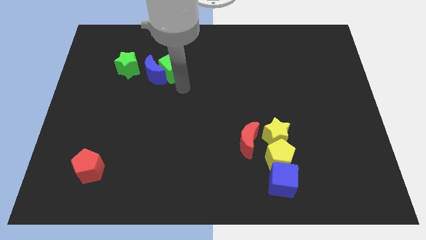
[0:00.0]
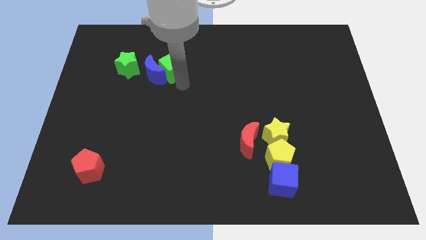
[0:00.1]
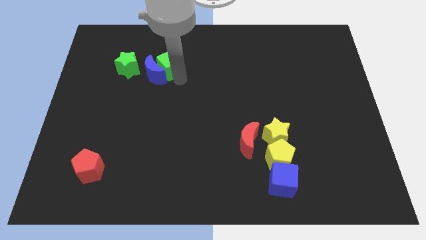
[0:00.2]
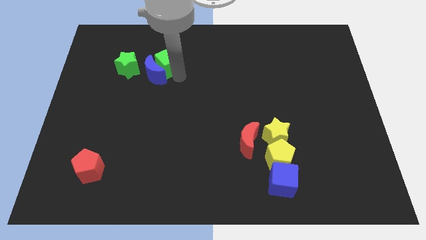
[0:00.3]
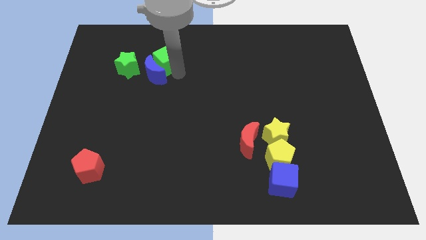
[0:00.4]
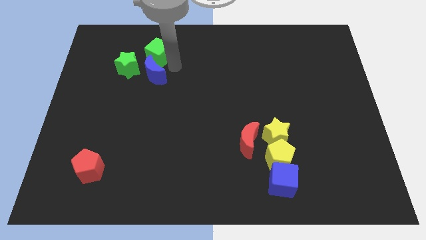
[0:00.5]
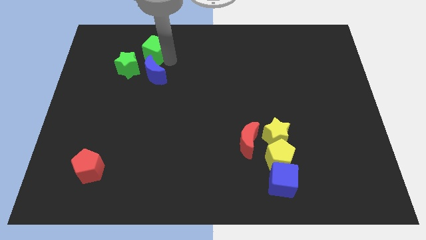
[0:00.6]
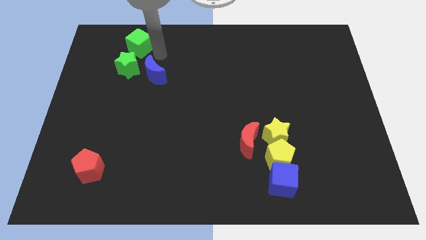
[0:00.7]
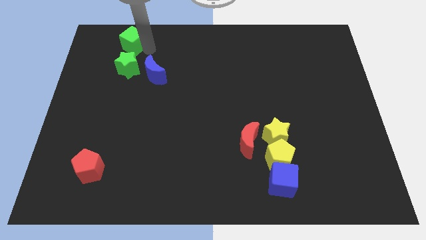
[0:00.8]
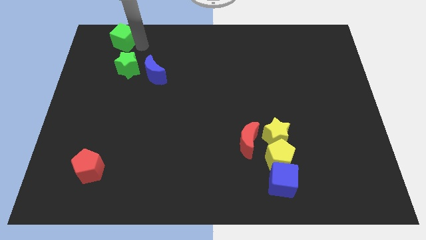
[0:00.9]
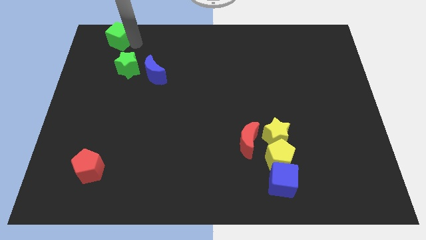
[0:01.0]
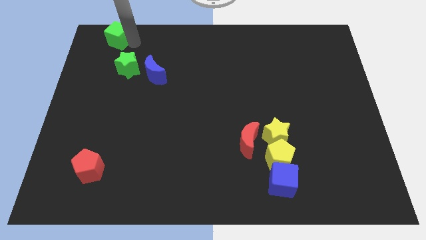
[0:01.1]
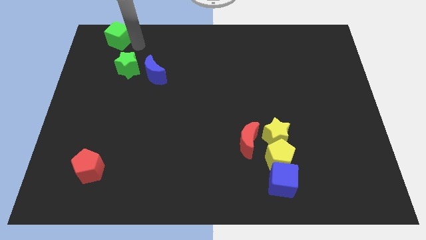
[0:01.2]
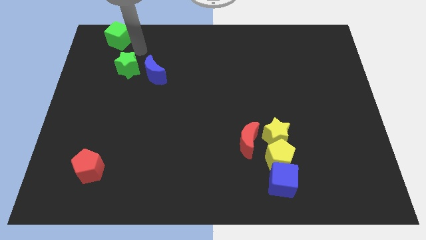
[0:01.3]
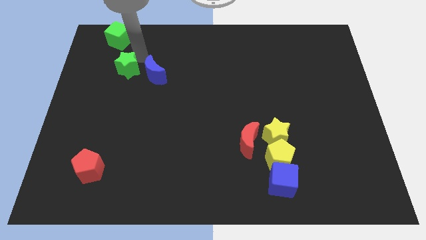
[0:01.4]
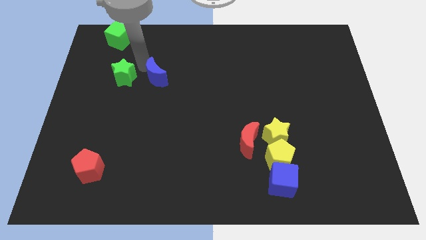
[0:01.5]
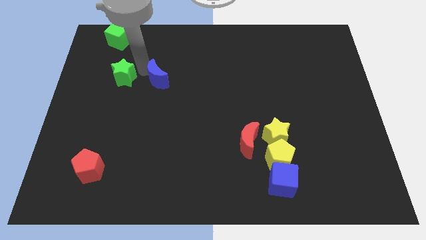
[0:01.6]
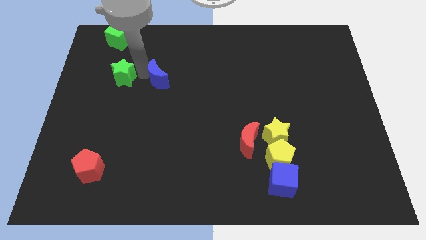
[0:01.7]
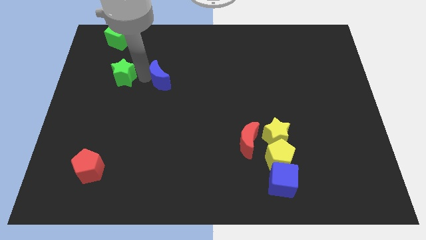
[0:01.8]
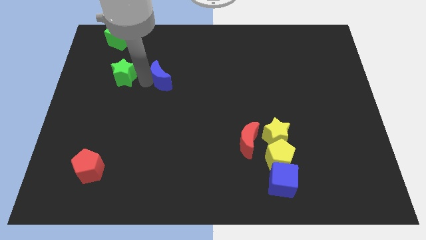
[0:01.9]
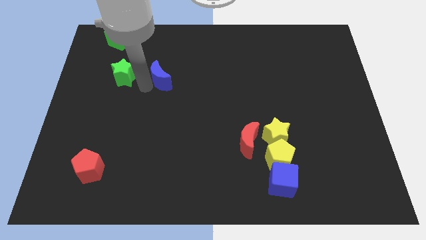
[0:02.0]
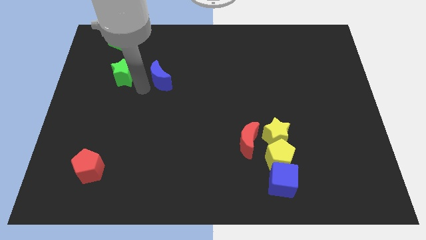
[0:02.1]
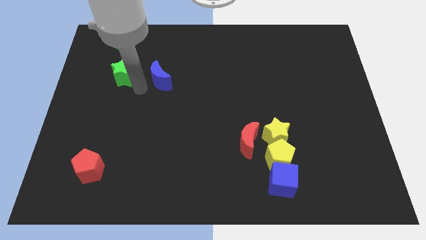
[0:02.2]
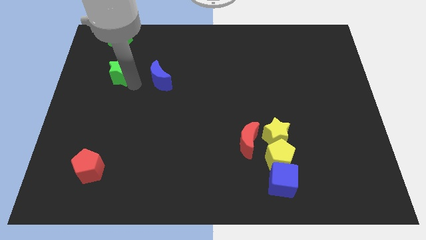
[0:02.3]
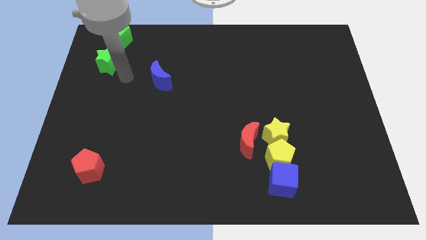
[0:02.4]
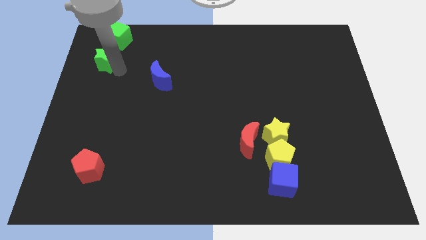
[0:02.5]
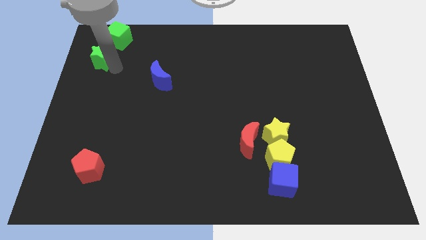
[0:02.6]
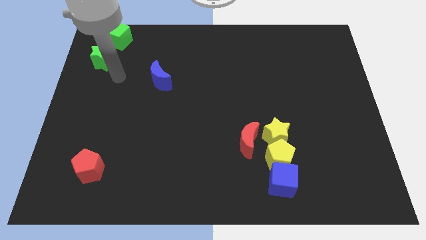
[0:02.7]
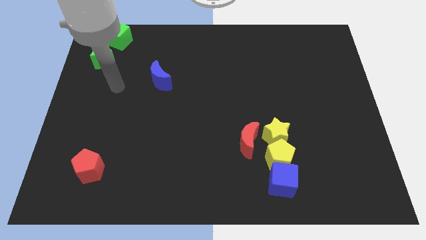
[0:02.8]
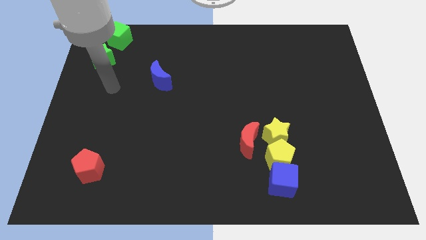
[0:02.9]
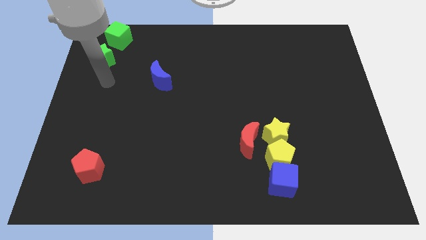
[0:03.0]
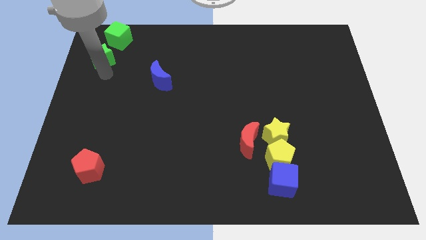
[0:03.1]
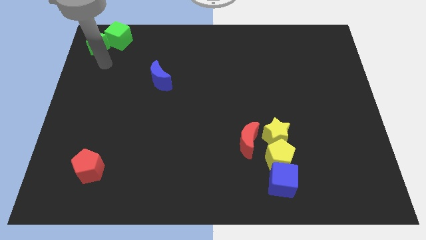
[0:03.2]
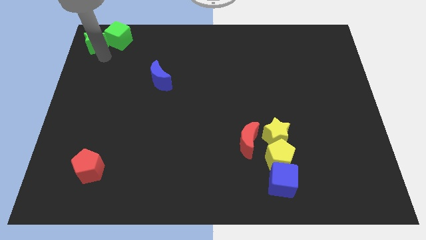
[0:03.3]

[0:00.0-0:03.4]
push the green cube and green star to the top left corner

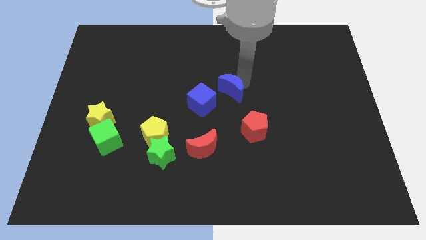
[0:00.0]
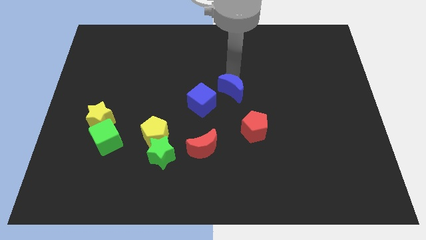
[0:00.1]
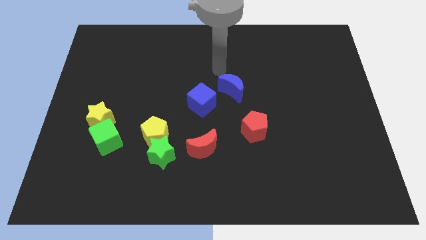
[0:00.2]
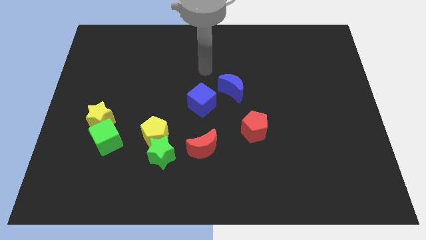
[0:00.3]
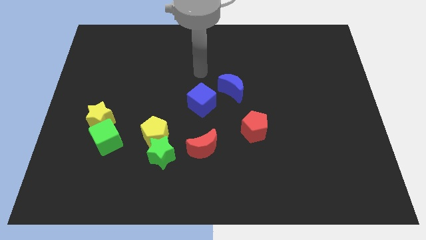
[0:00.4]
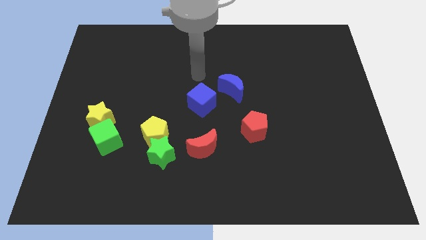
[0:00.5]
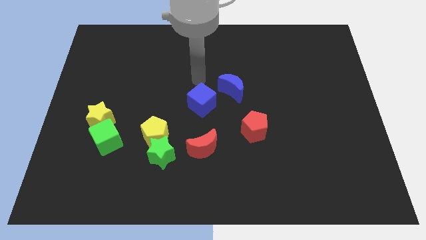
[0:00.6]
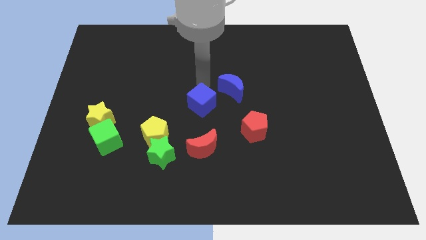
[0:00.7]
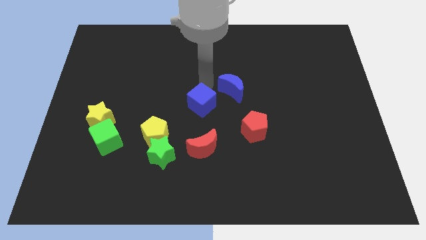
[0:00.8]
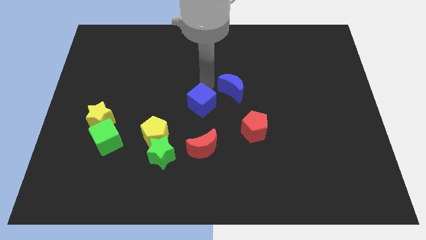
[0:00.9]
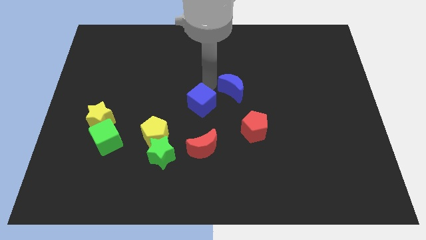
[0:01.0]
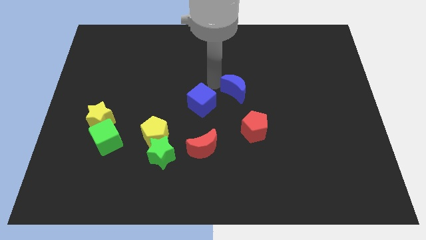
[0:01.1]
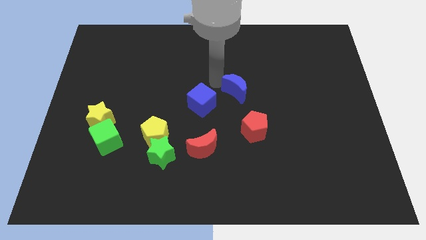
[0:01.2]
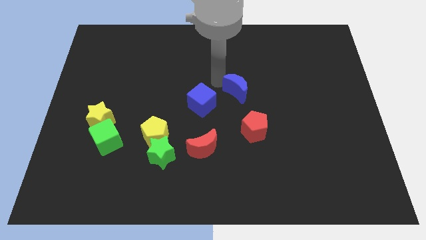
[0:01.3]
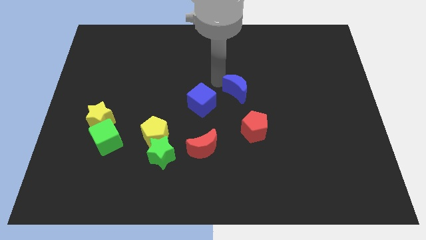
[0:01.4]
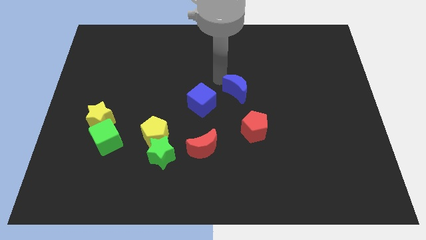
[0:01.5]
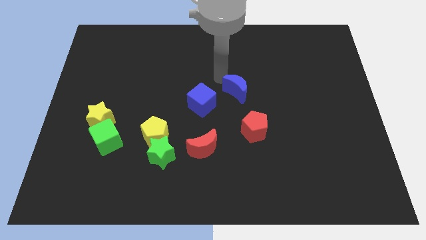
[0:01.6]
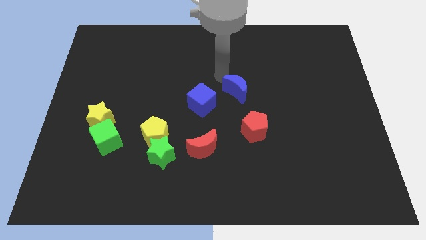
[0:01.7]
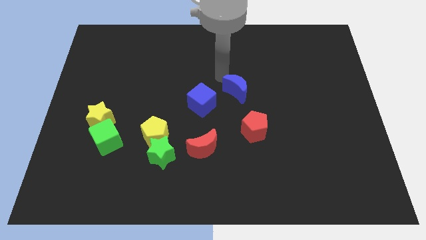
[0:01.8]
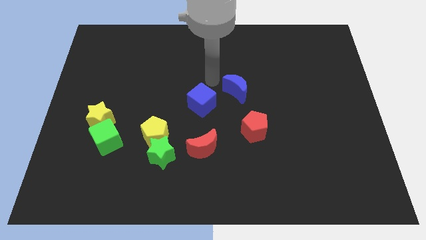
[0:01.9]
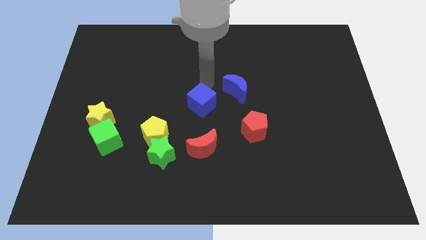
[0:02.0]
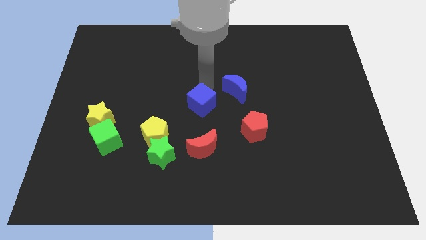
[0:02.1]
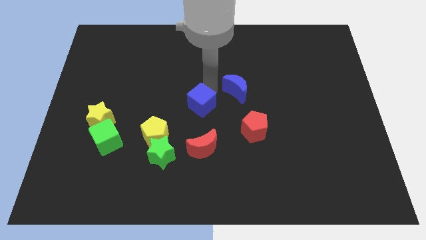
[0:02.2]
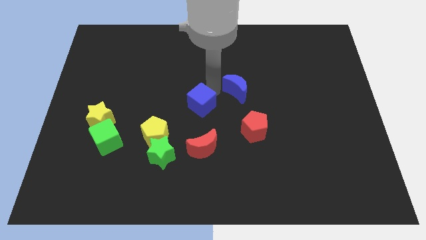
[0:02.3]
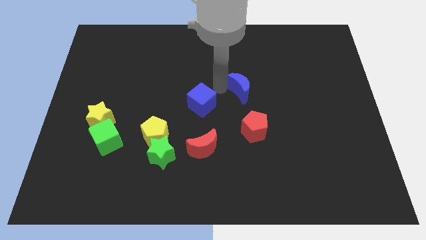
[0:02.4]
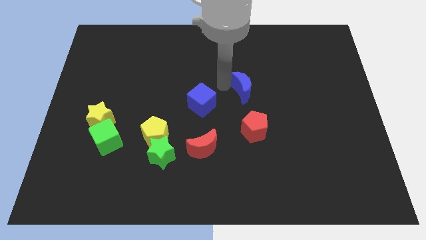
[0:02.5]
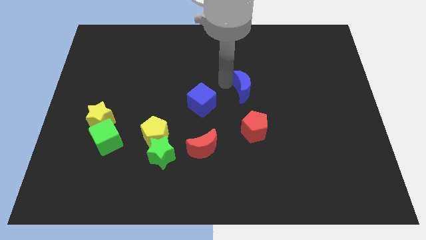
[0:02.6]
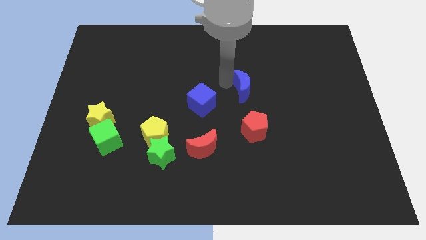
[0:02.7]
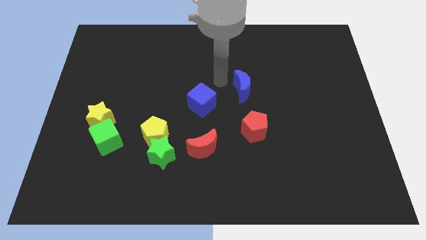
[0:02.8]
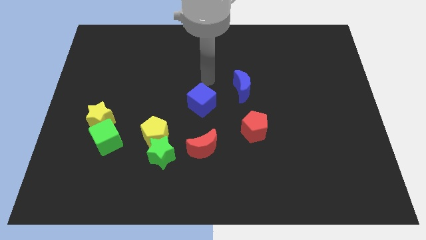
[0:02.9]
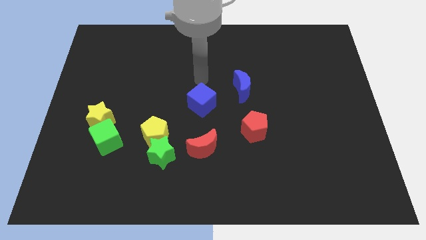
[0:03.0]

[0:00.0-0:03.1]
separate blue moon from the blue cube

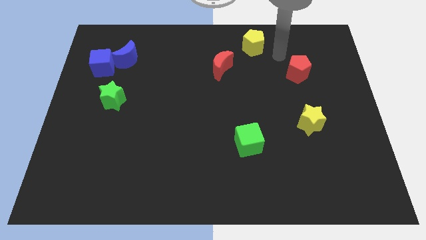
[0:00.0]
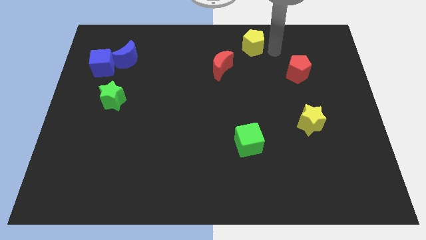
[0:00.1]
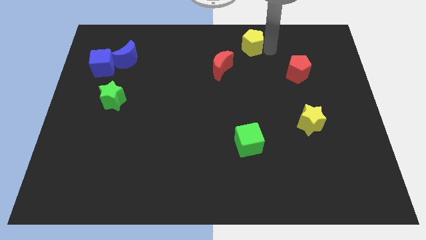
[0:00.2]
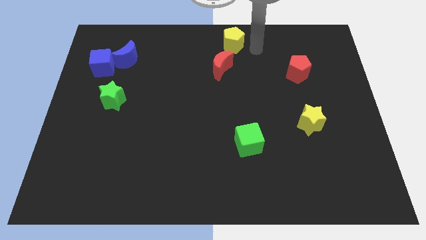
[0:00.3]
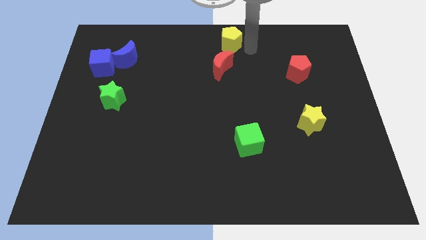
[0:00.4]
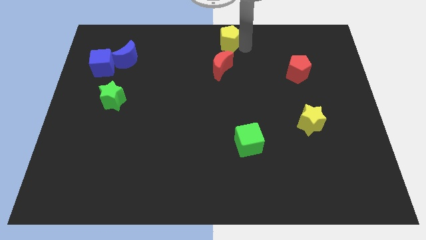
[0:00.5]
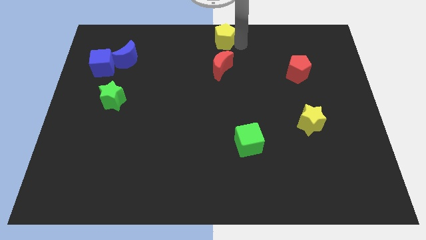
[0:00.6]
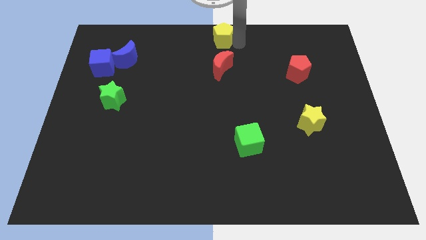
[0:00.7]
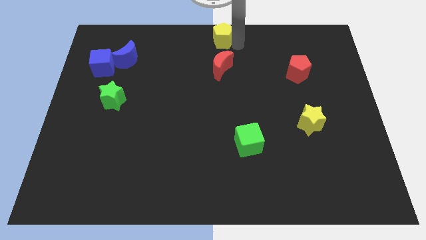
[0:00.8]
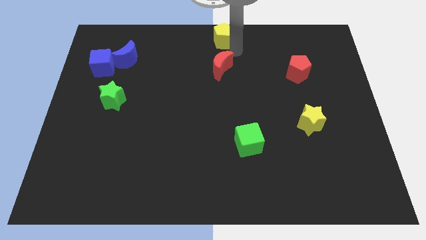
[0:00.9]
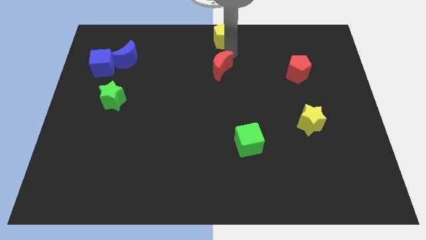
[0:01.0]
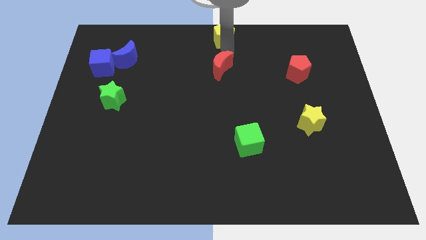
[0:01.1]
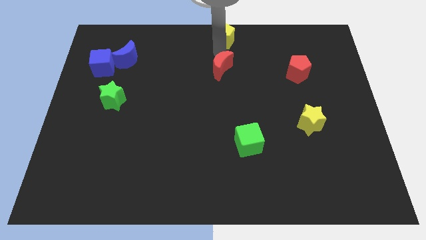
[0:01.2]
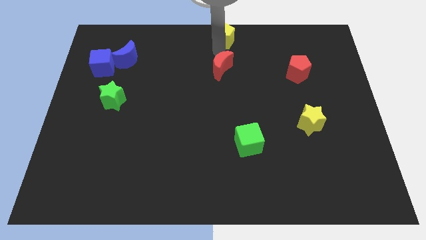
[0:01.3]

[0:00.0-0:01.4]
place the yellow pentagon at the top center of the board

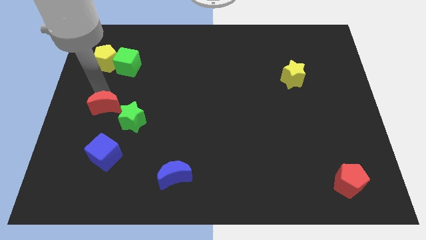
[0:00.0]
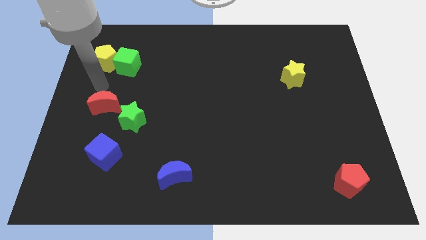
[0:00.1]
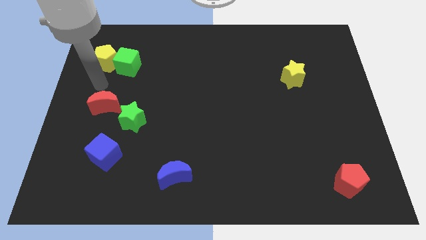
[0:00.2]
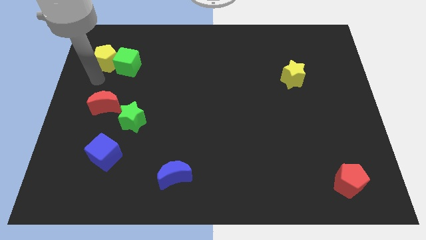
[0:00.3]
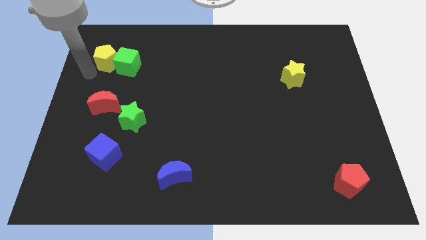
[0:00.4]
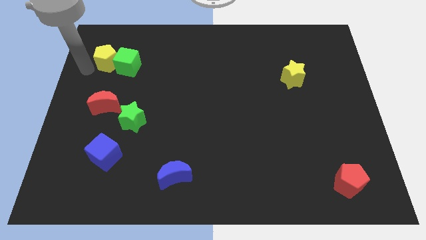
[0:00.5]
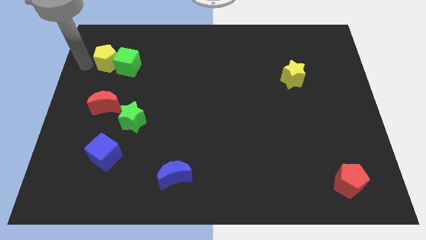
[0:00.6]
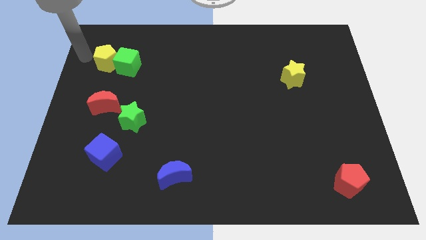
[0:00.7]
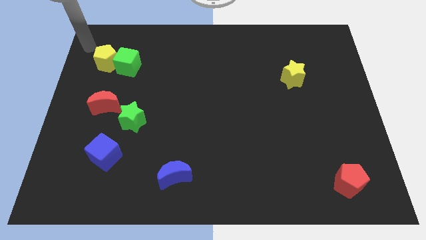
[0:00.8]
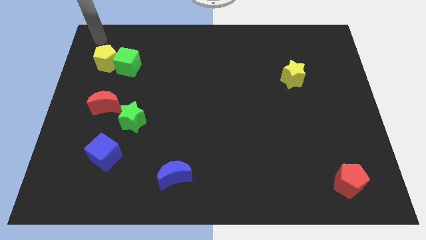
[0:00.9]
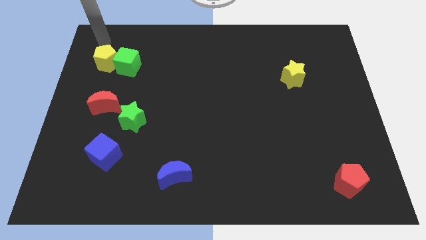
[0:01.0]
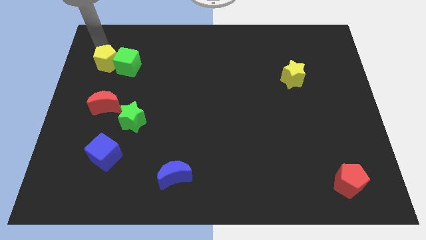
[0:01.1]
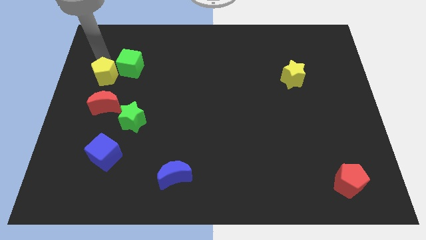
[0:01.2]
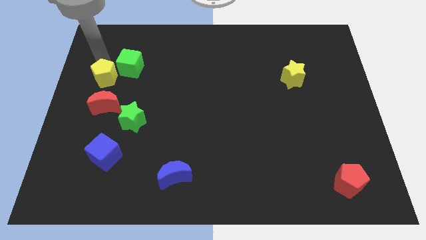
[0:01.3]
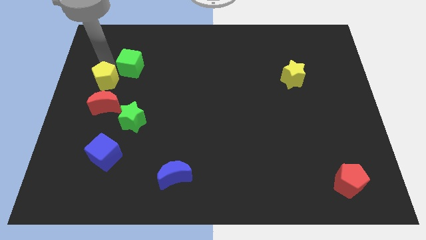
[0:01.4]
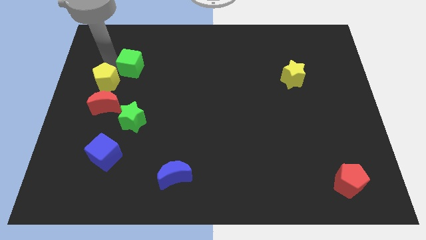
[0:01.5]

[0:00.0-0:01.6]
put the yellow pentagon to the top side of the red crescent
